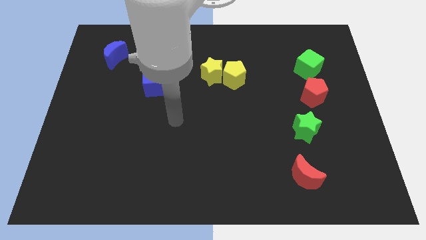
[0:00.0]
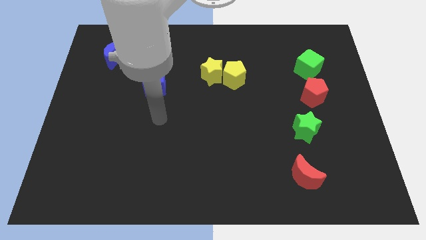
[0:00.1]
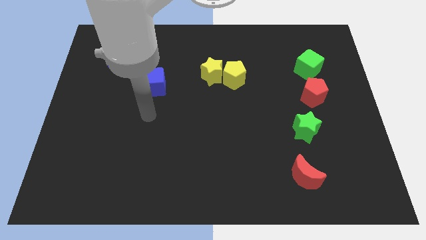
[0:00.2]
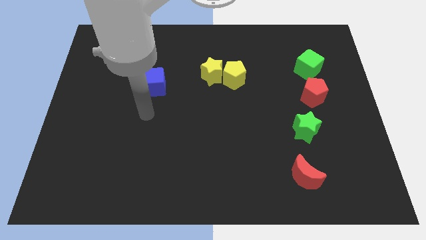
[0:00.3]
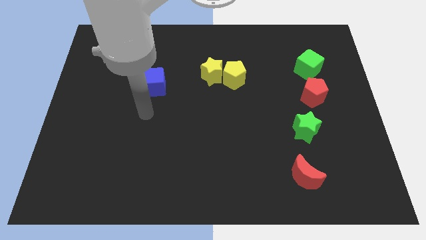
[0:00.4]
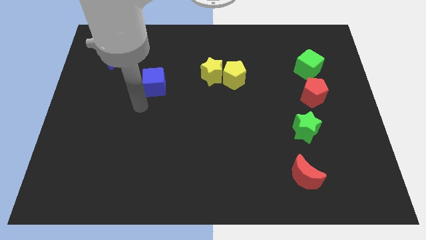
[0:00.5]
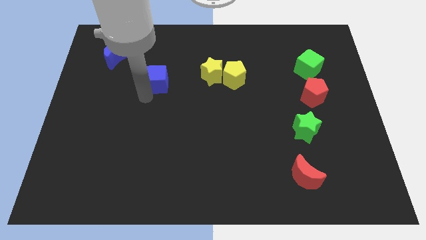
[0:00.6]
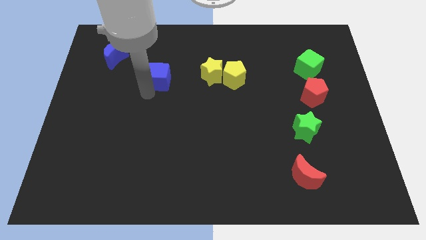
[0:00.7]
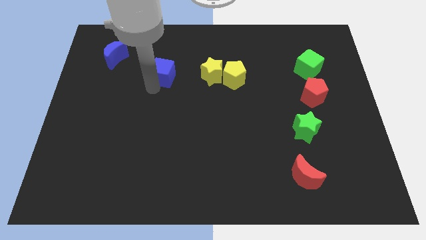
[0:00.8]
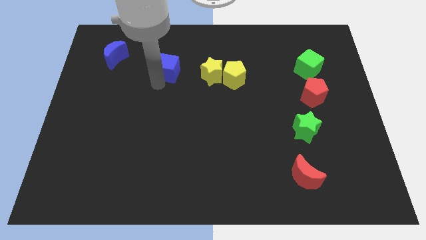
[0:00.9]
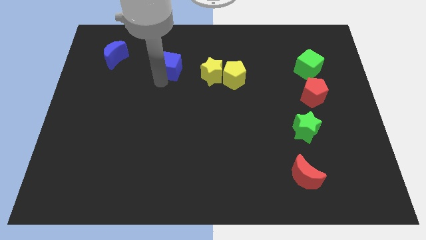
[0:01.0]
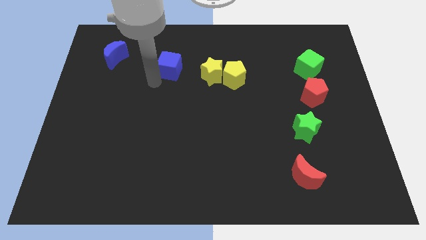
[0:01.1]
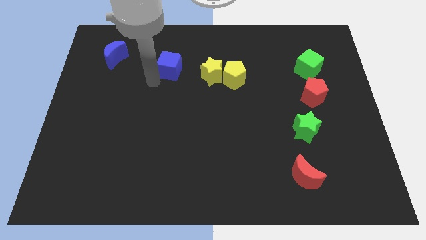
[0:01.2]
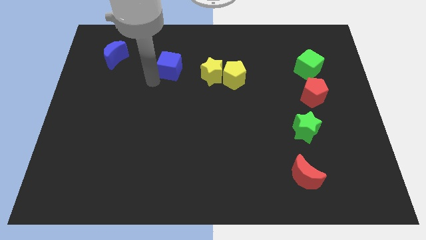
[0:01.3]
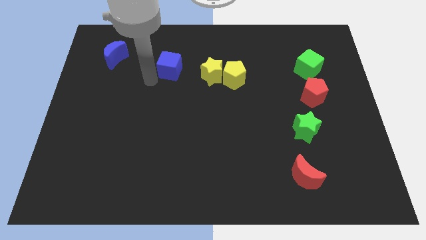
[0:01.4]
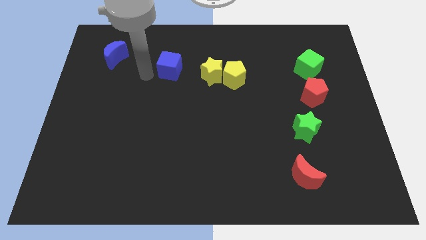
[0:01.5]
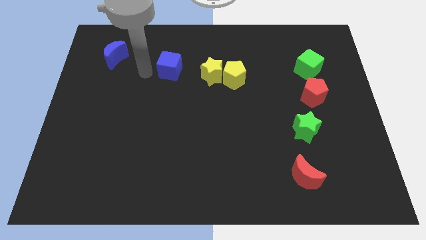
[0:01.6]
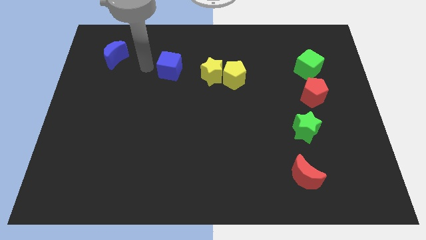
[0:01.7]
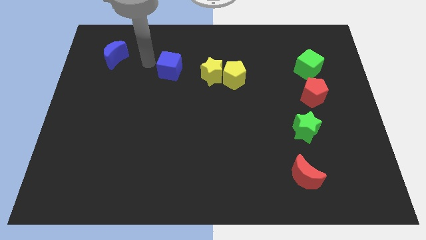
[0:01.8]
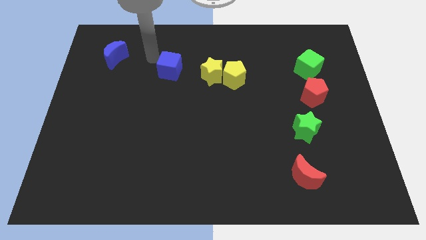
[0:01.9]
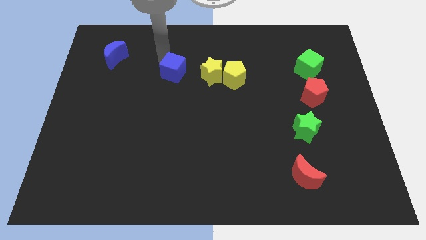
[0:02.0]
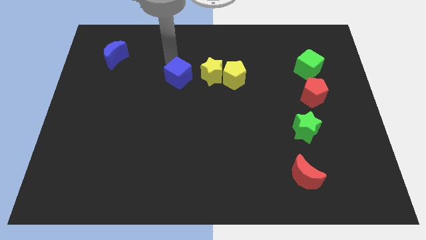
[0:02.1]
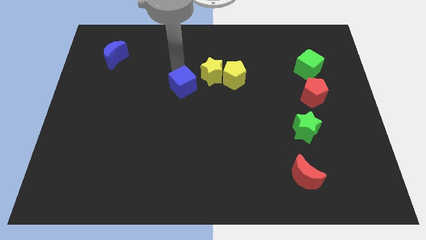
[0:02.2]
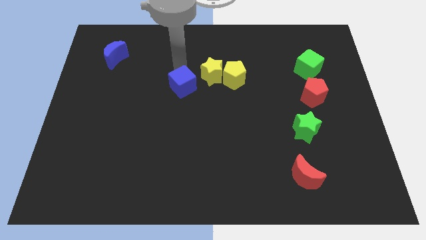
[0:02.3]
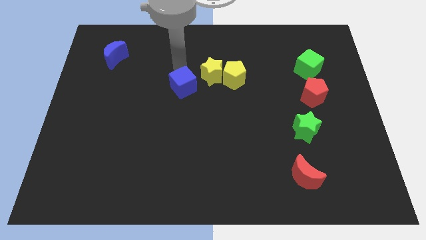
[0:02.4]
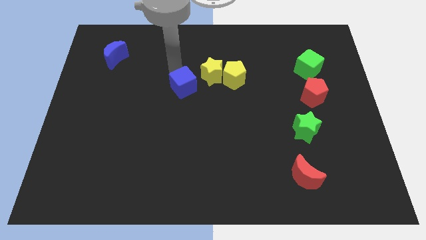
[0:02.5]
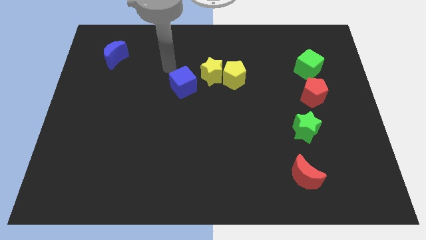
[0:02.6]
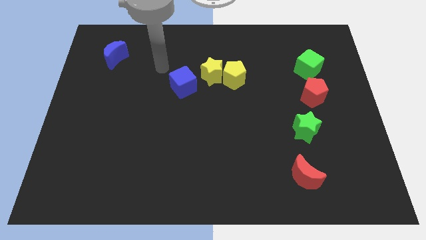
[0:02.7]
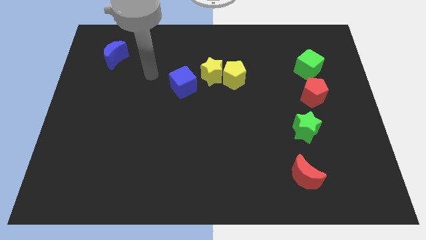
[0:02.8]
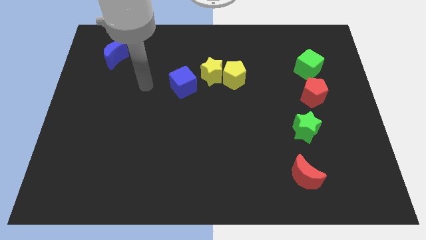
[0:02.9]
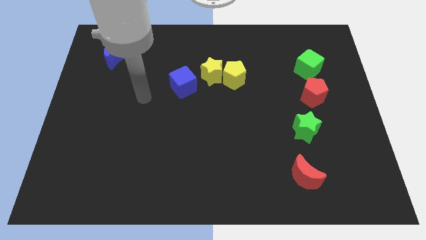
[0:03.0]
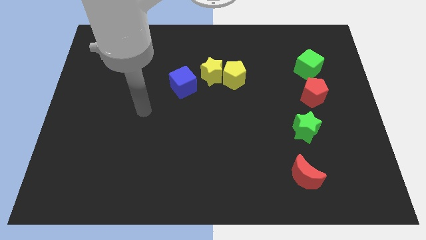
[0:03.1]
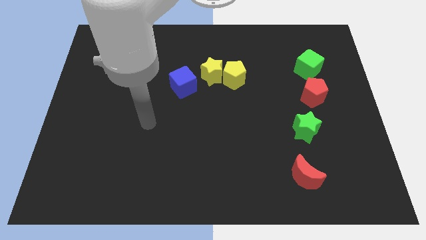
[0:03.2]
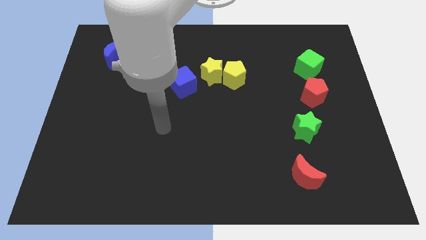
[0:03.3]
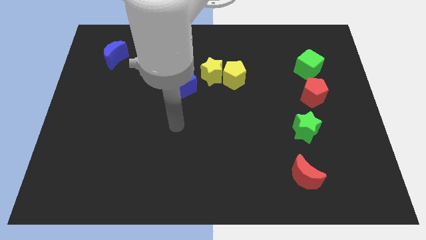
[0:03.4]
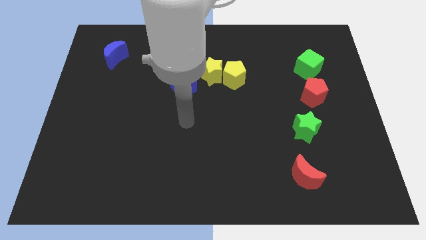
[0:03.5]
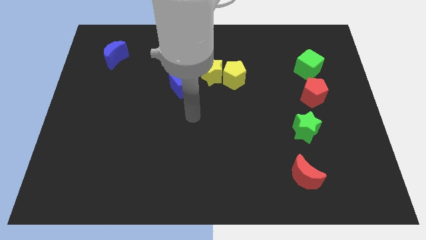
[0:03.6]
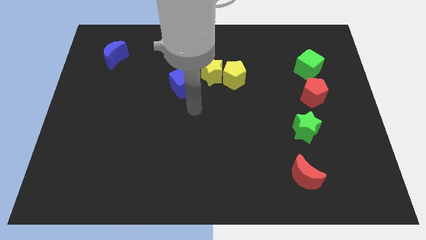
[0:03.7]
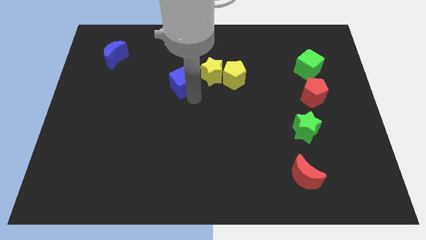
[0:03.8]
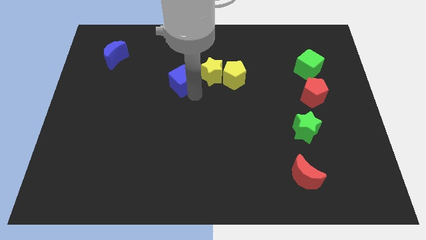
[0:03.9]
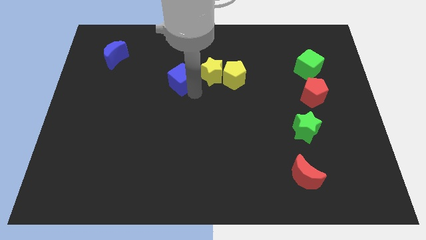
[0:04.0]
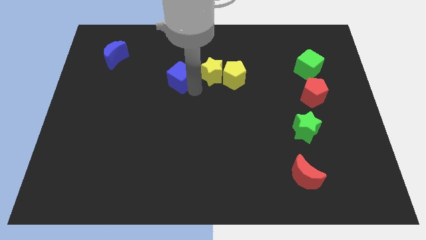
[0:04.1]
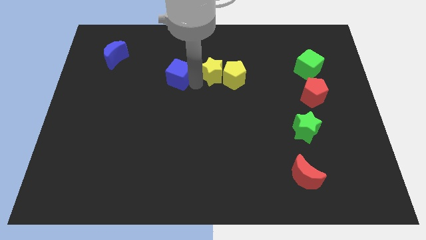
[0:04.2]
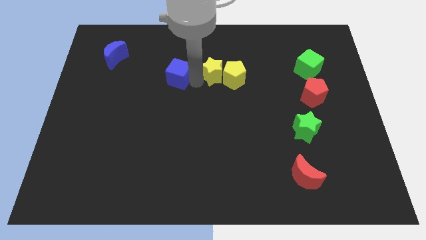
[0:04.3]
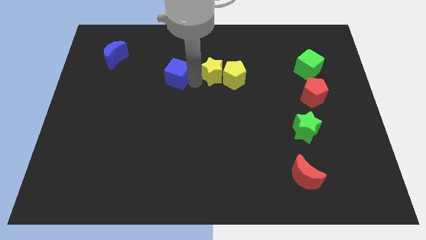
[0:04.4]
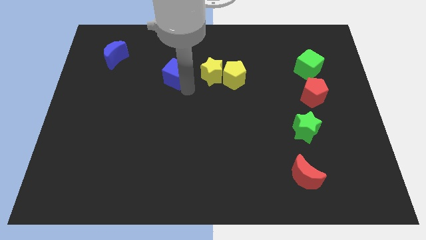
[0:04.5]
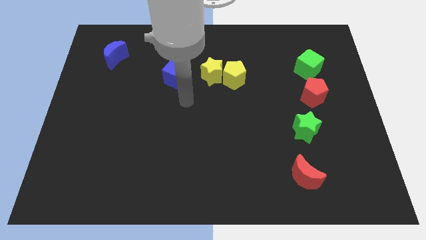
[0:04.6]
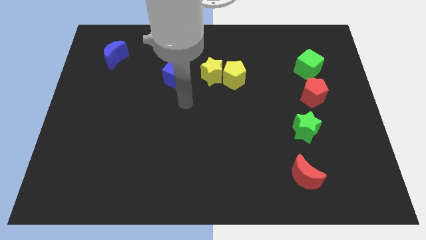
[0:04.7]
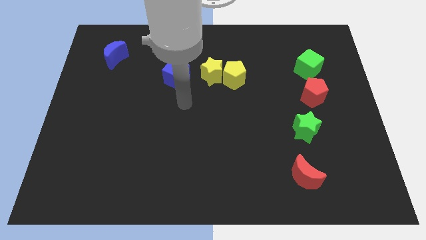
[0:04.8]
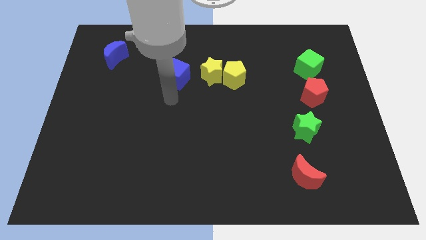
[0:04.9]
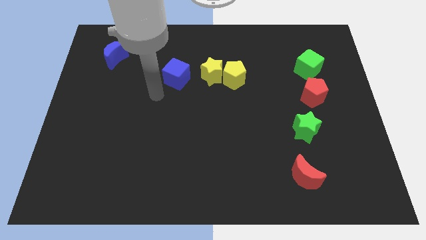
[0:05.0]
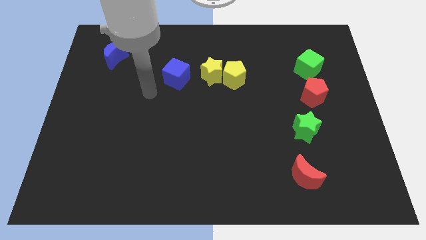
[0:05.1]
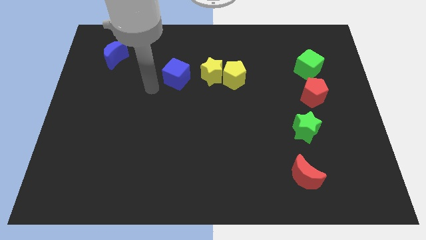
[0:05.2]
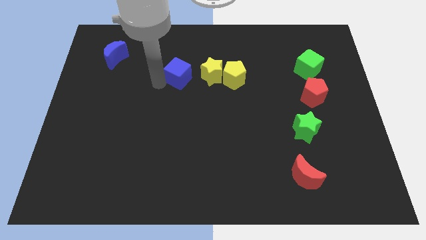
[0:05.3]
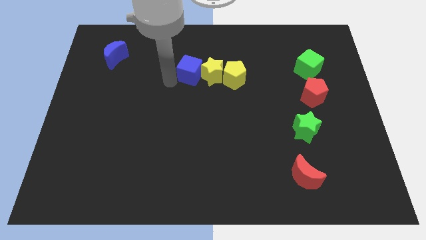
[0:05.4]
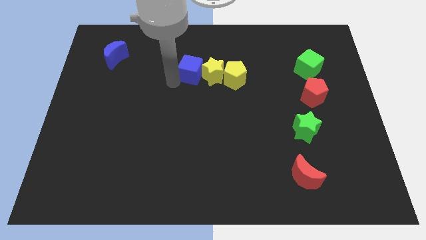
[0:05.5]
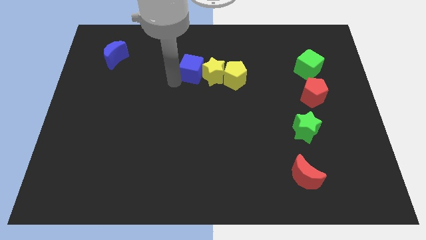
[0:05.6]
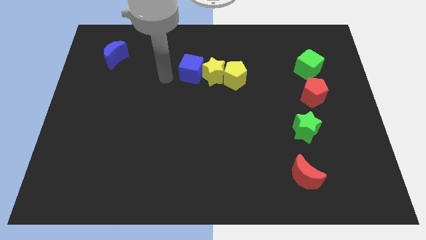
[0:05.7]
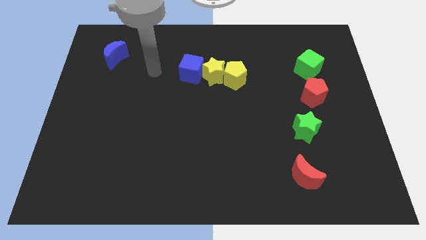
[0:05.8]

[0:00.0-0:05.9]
move blue cube into yellow star

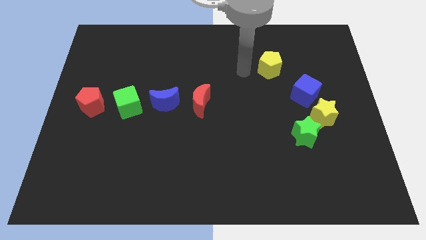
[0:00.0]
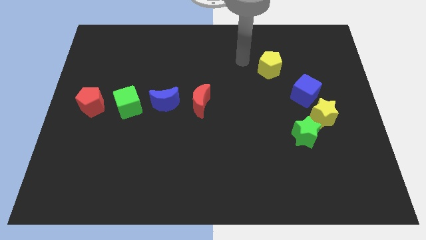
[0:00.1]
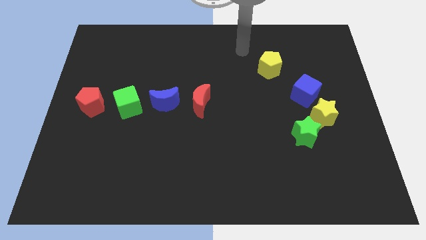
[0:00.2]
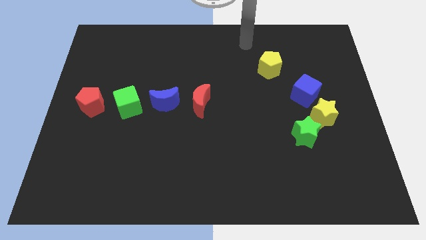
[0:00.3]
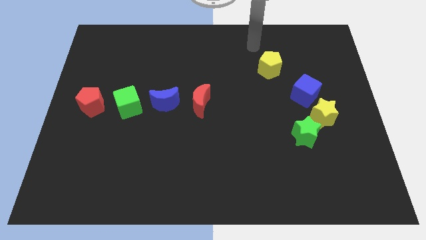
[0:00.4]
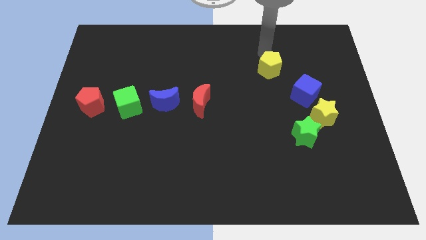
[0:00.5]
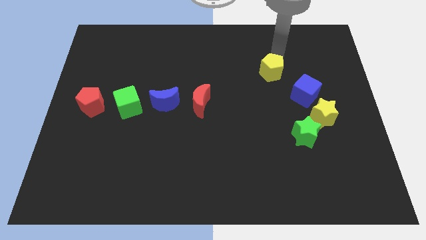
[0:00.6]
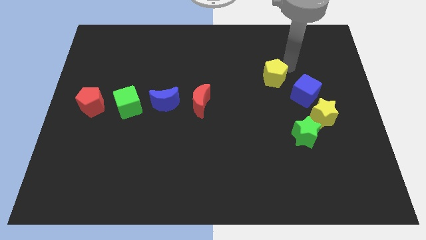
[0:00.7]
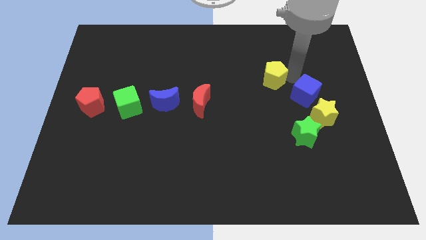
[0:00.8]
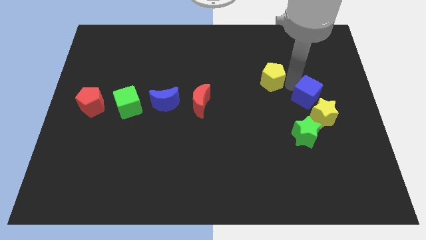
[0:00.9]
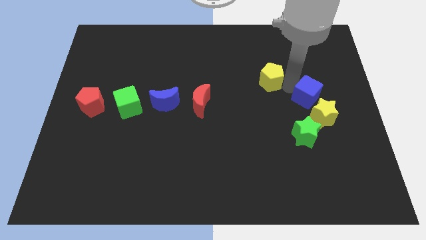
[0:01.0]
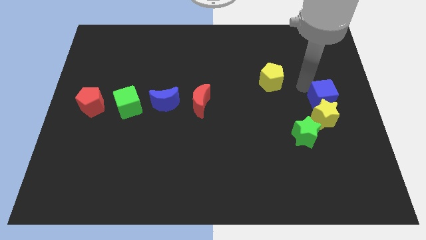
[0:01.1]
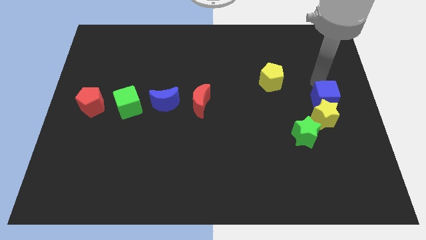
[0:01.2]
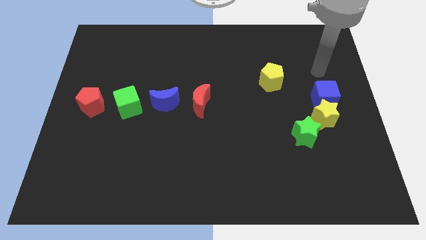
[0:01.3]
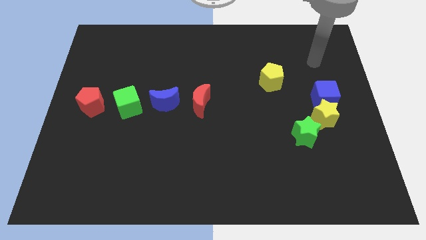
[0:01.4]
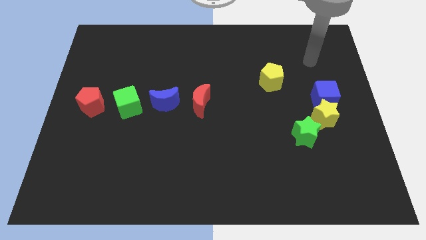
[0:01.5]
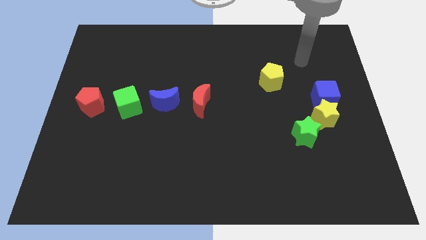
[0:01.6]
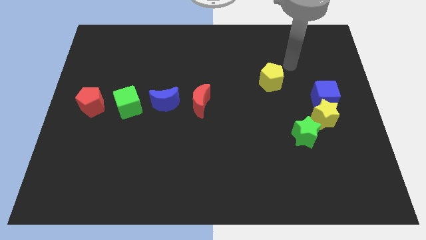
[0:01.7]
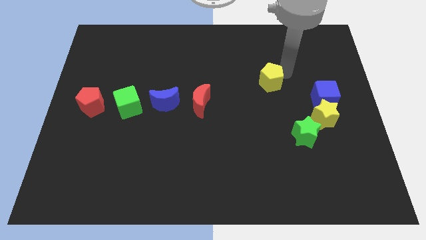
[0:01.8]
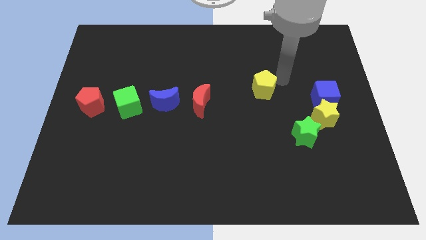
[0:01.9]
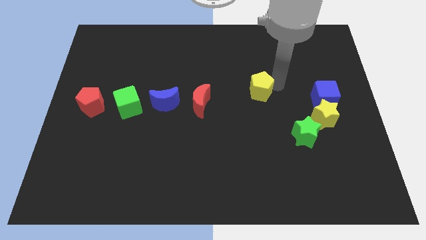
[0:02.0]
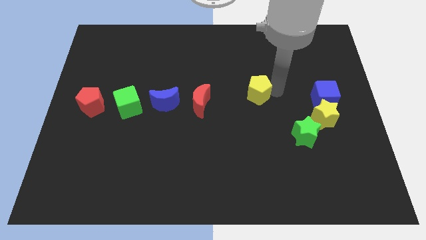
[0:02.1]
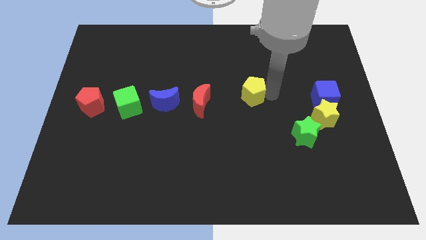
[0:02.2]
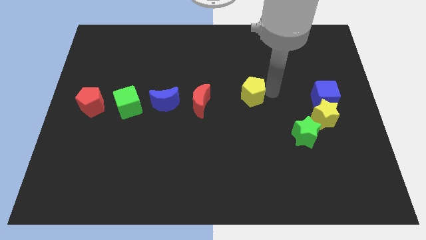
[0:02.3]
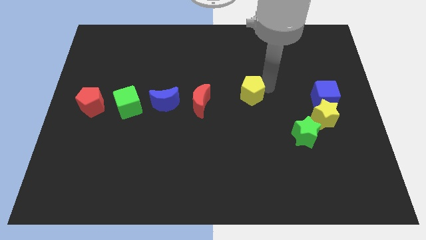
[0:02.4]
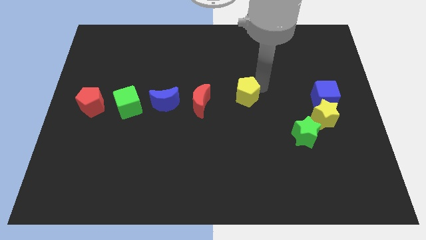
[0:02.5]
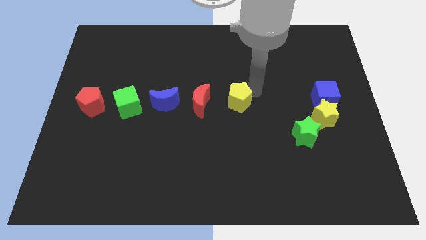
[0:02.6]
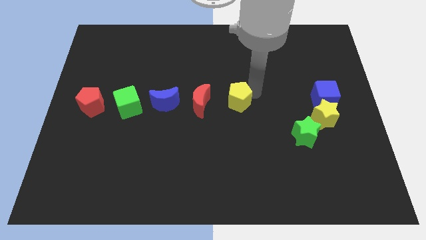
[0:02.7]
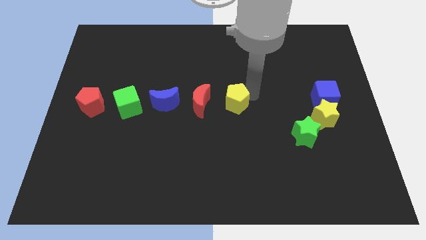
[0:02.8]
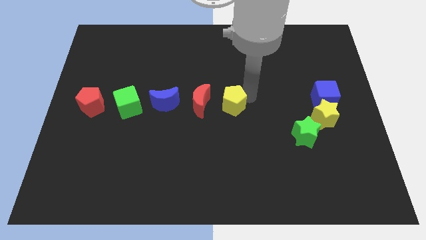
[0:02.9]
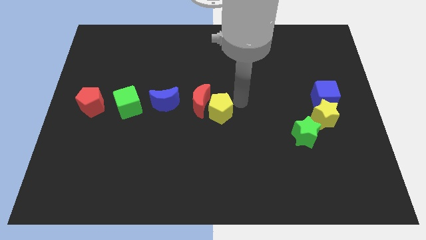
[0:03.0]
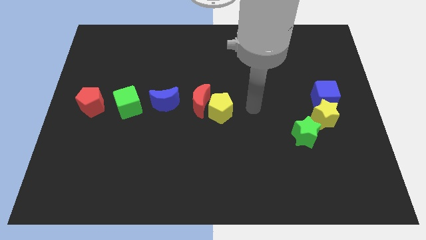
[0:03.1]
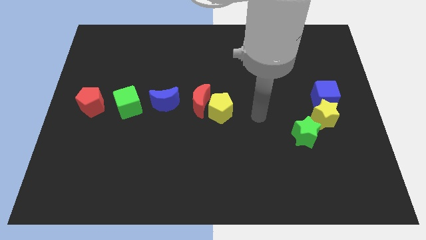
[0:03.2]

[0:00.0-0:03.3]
push the yellow pentagon to the right of the red crescent
